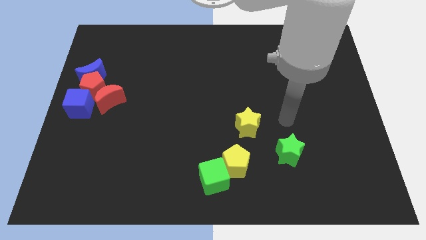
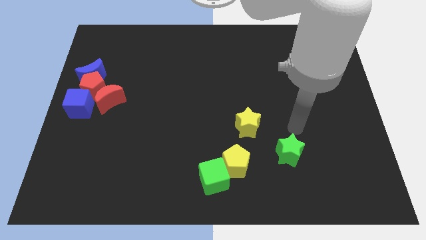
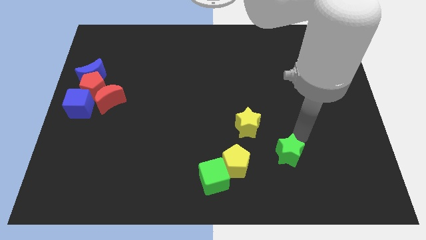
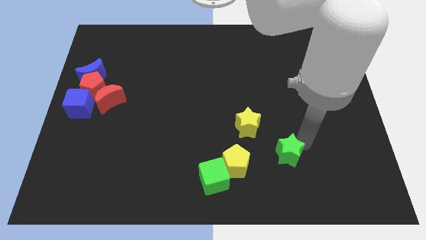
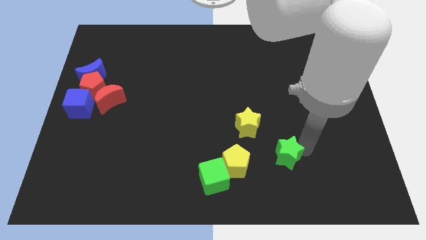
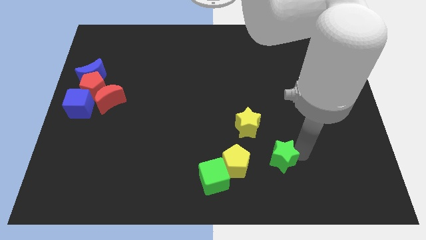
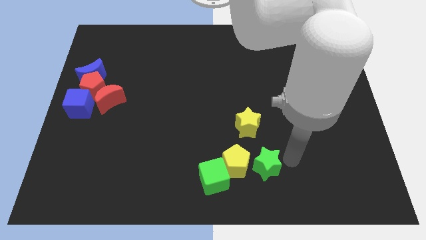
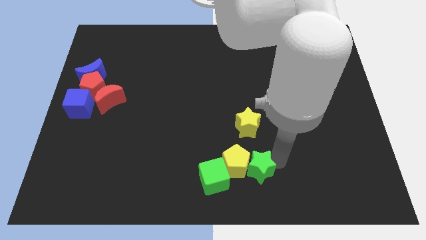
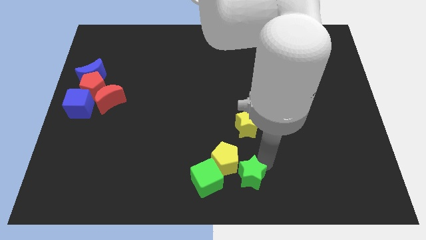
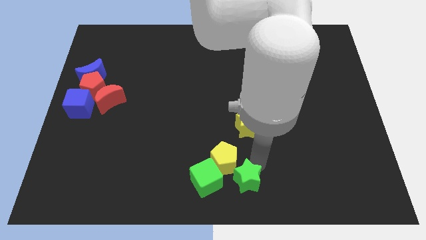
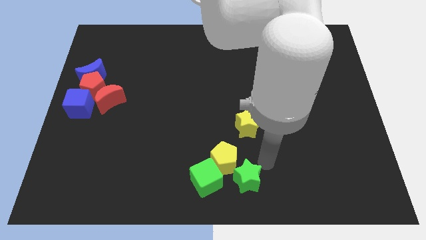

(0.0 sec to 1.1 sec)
place the green star to the bottom center

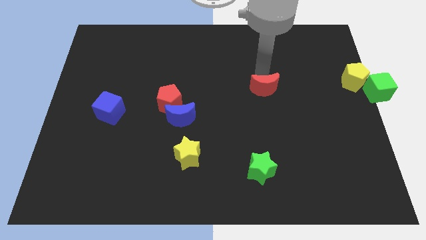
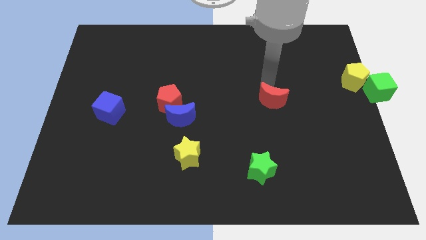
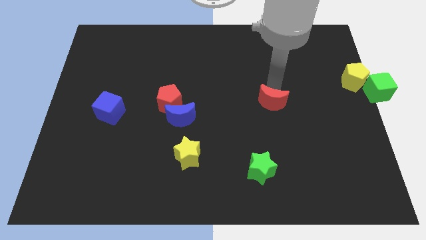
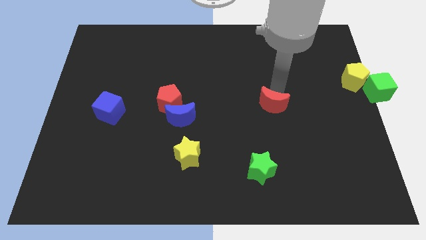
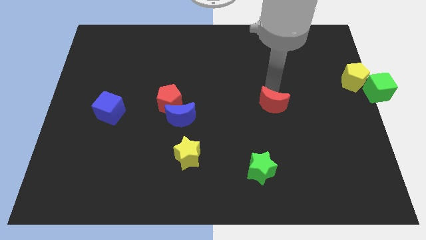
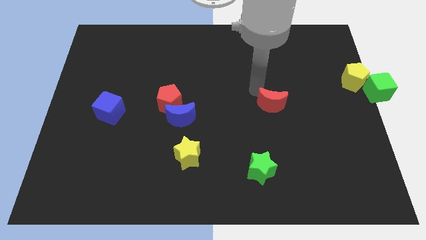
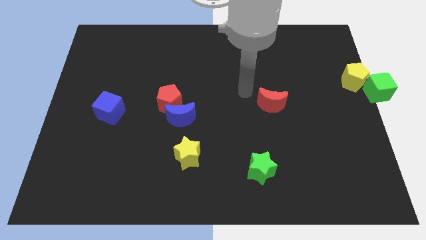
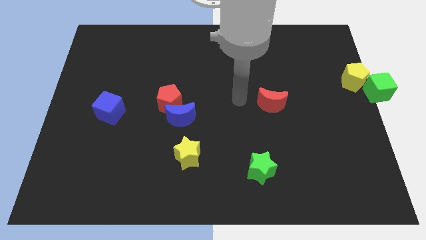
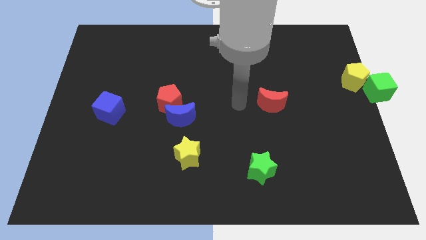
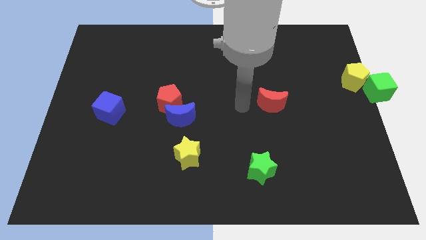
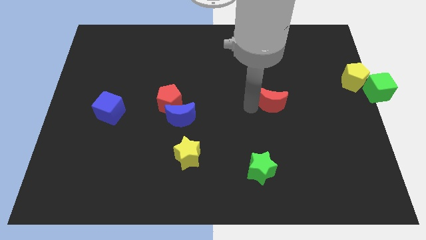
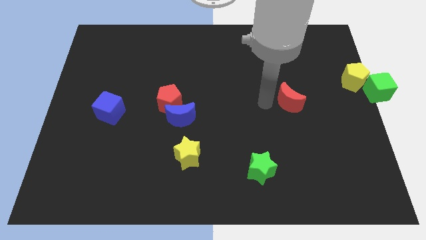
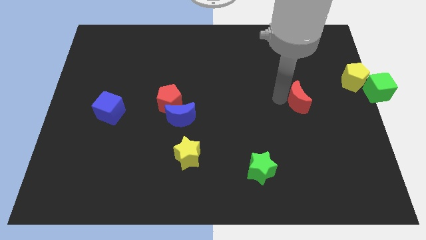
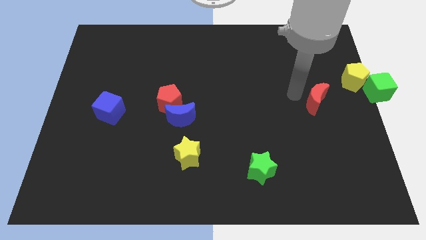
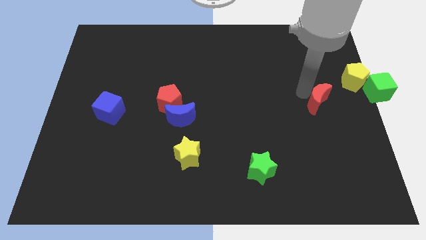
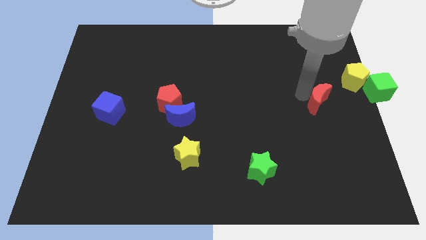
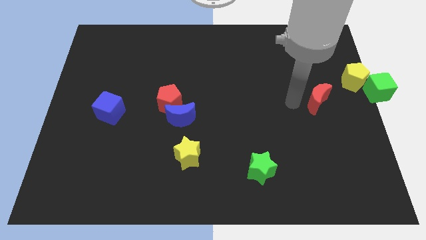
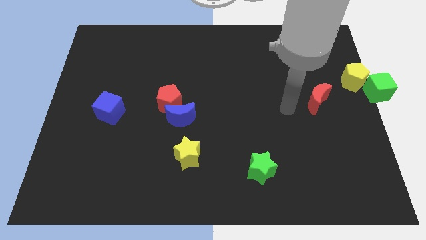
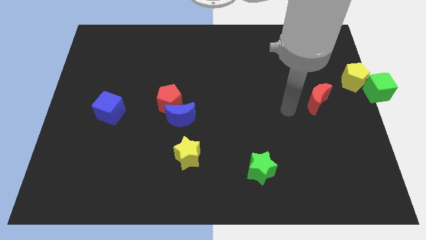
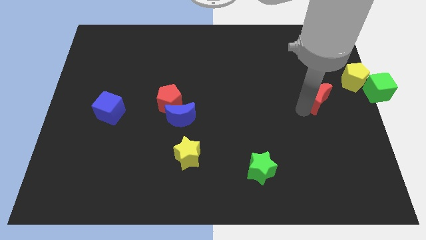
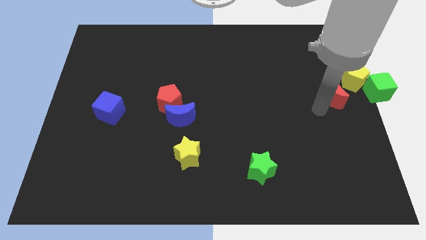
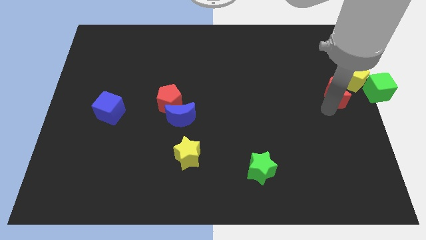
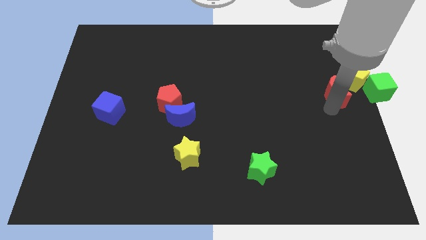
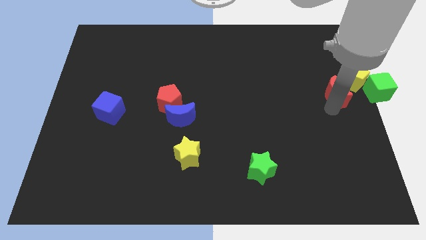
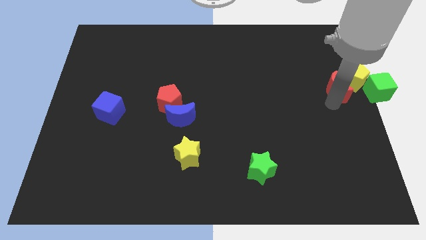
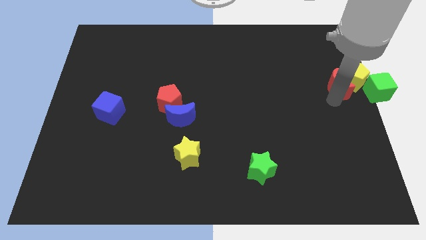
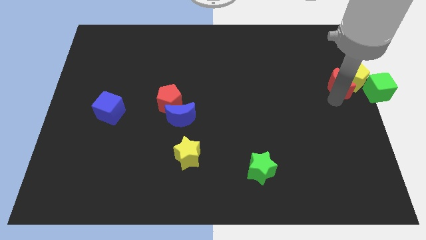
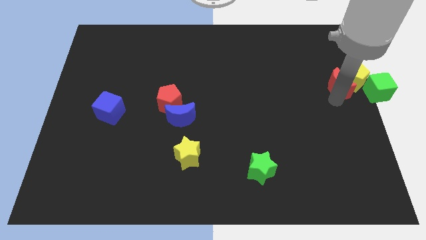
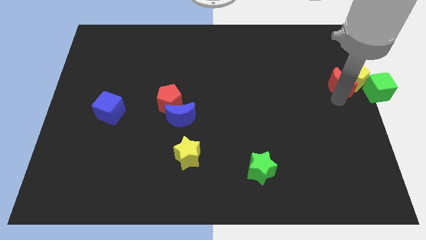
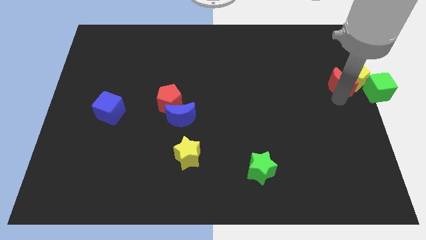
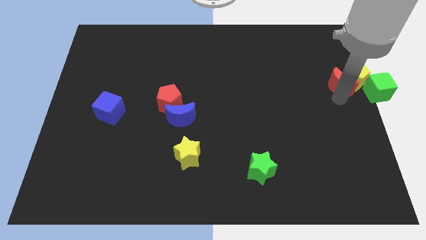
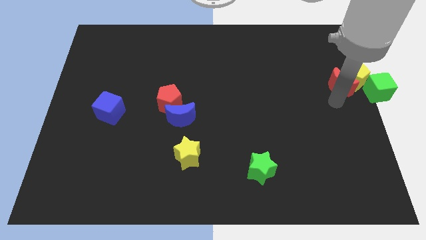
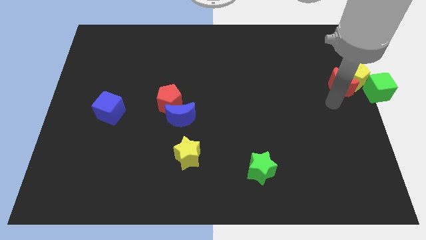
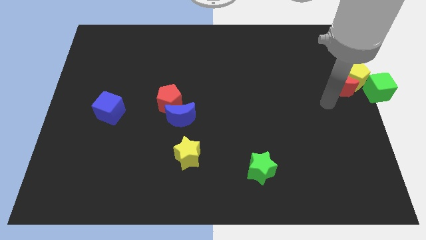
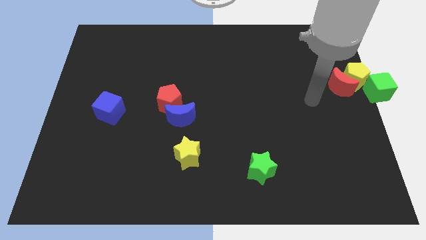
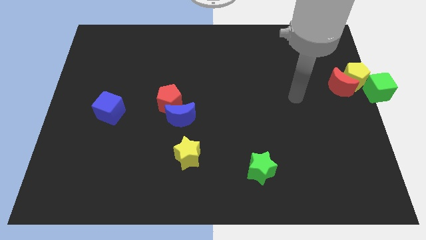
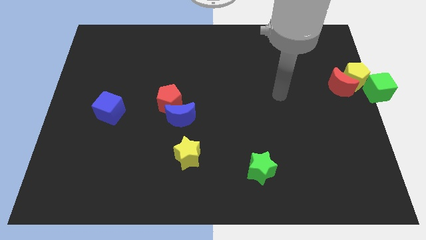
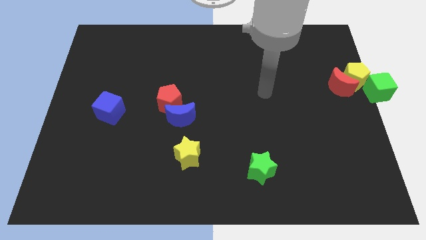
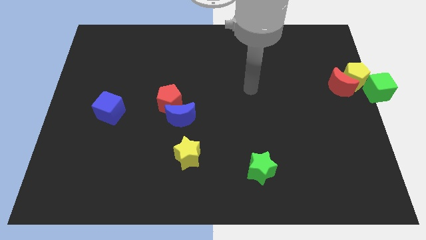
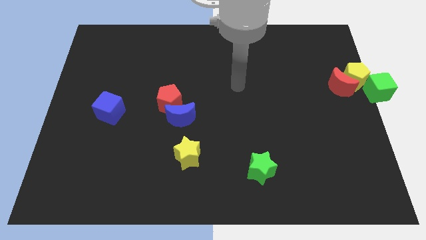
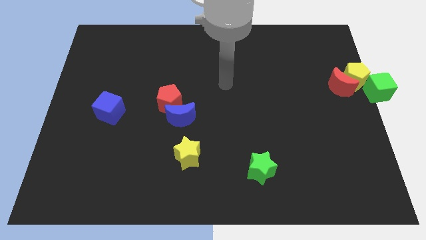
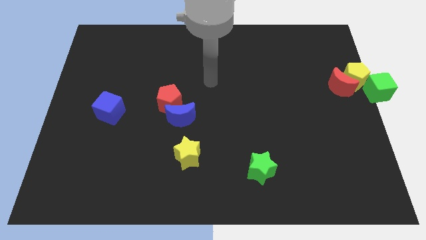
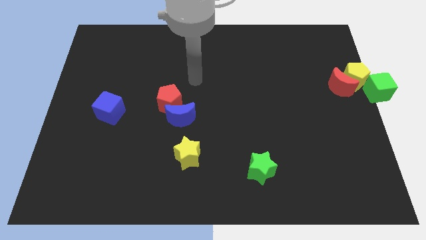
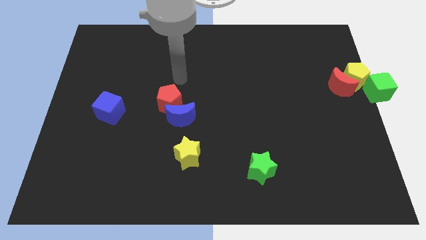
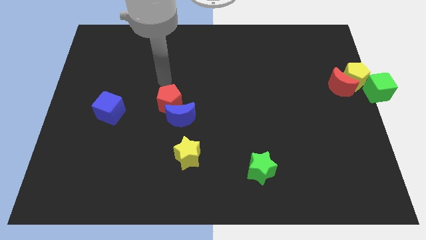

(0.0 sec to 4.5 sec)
push the red moon into yellow pentagon

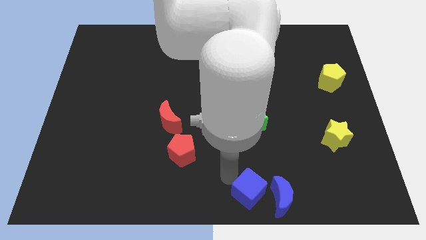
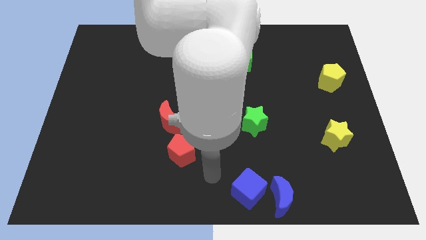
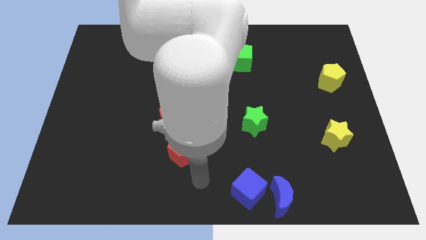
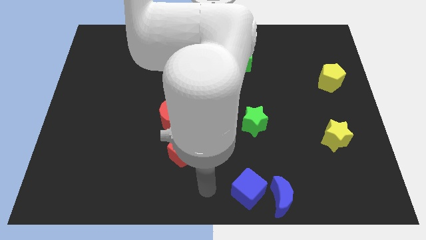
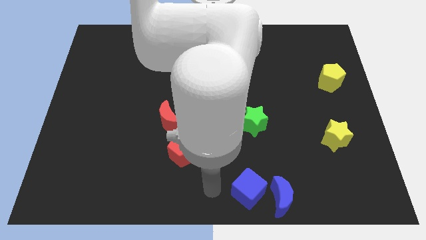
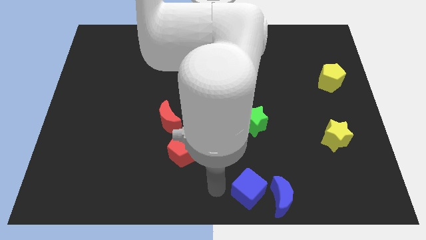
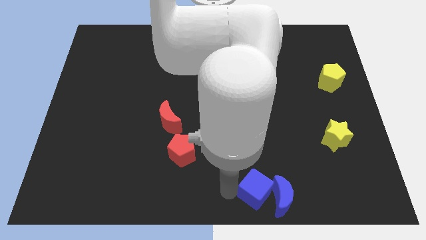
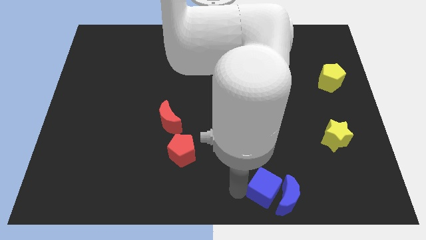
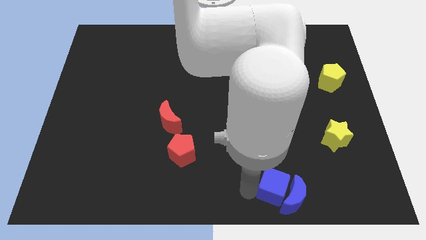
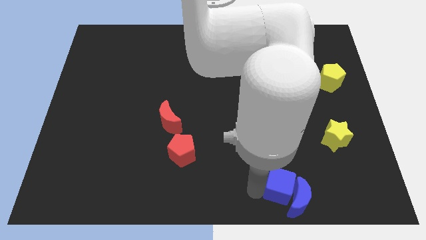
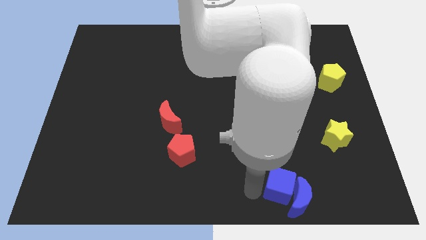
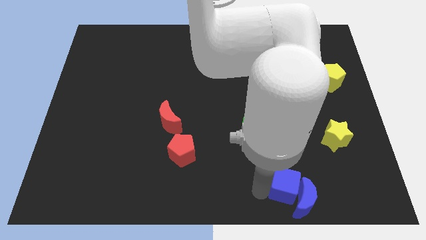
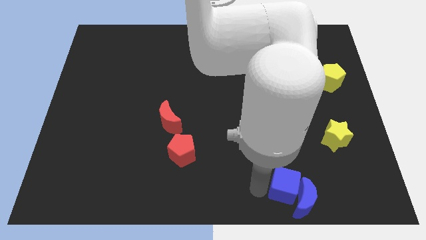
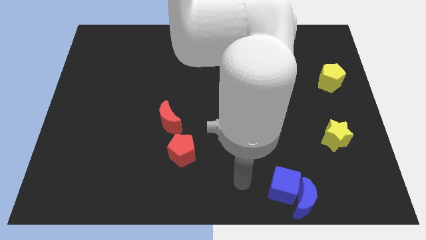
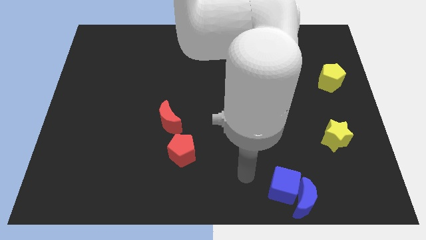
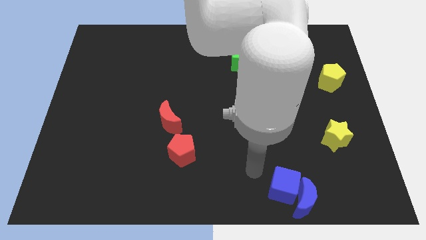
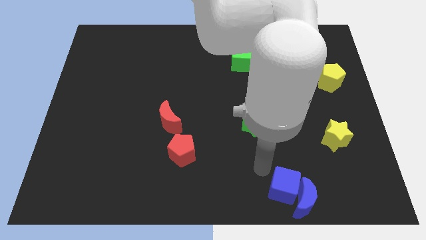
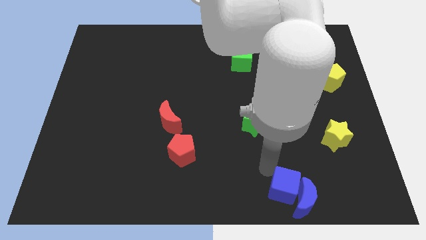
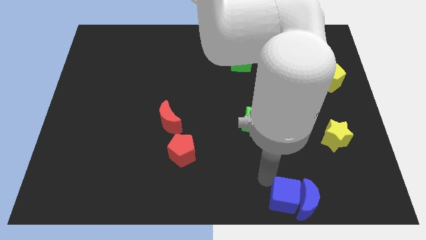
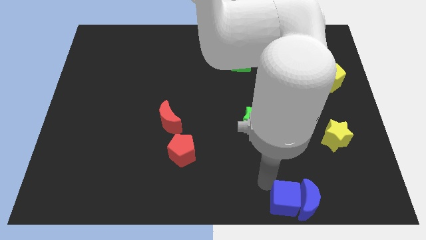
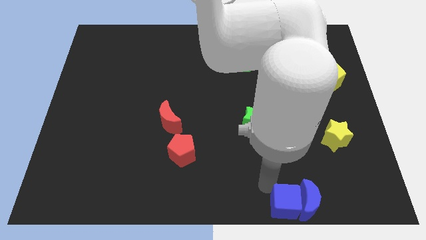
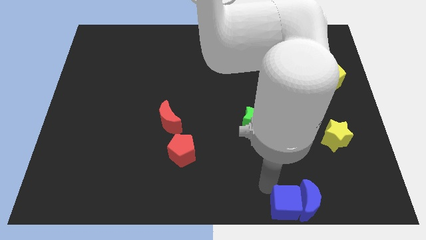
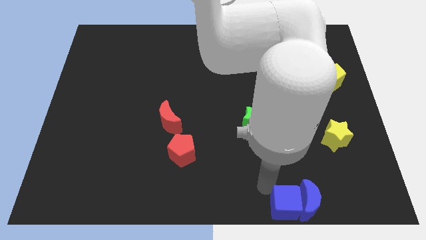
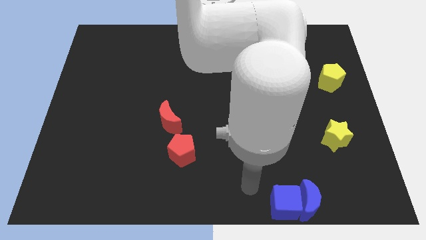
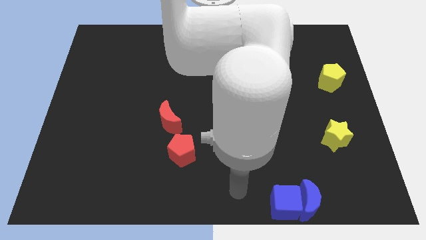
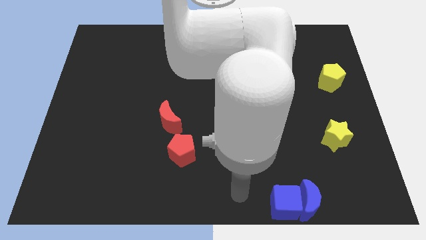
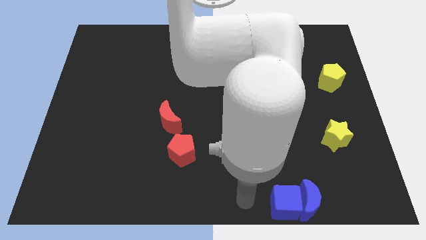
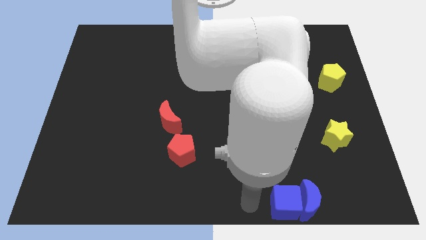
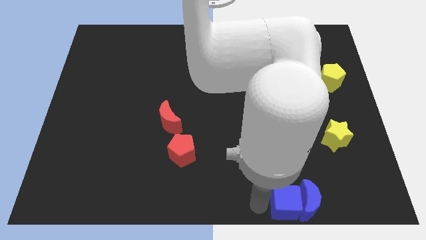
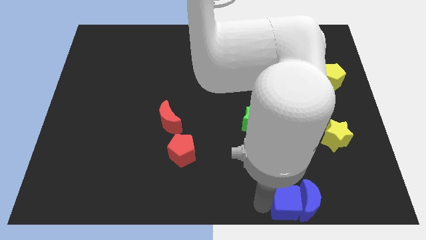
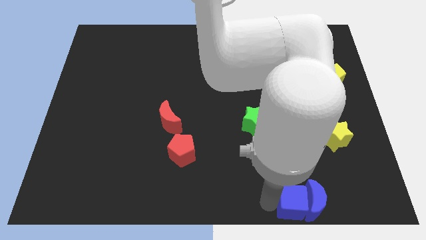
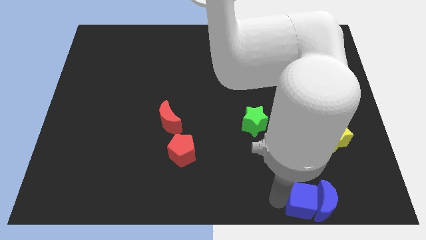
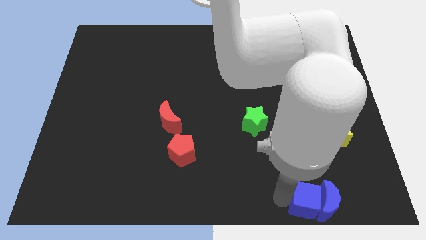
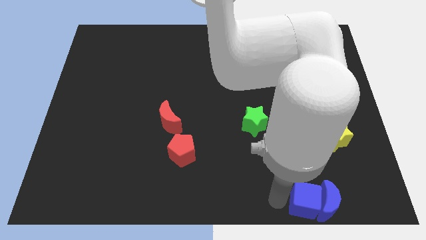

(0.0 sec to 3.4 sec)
push the blue blocks to the bottom right corner
